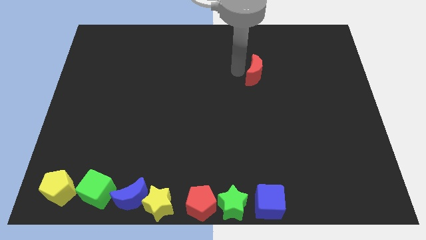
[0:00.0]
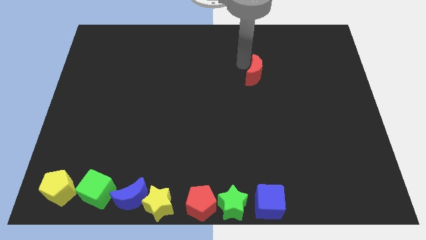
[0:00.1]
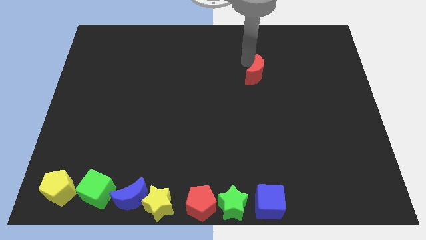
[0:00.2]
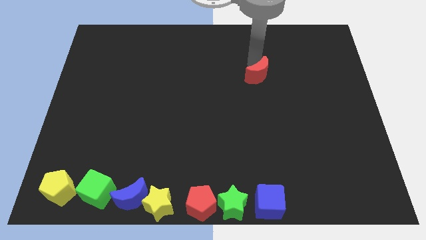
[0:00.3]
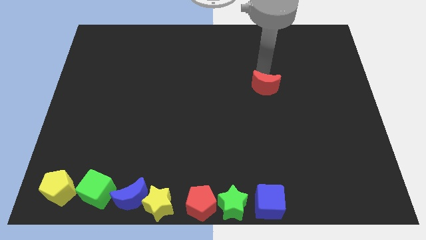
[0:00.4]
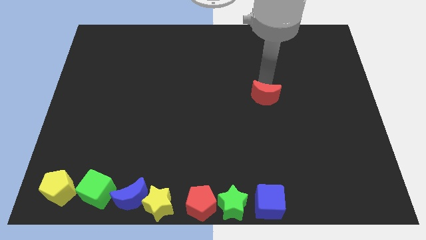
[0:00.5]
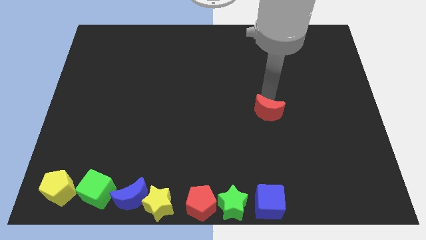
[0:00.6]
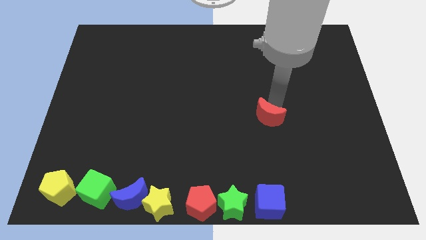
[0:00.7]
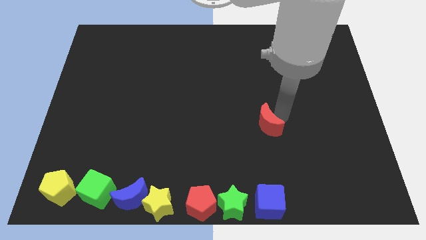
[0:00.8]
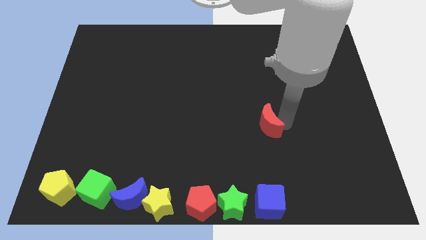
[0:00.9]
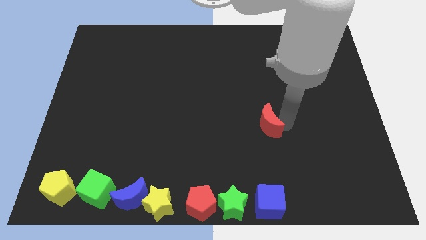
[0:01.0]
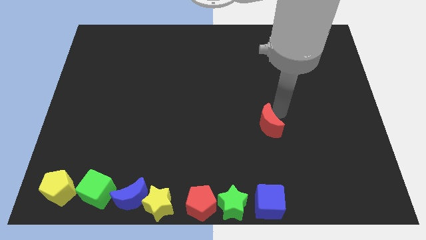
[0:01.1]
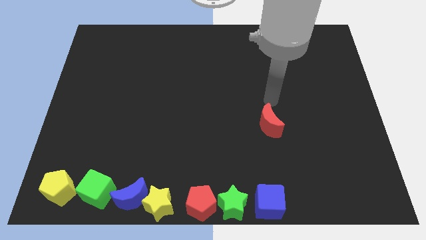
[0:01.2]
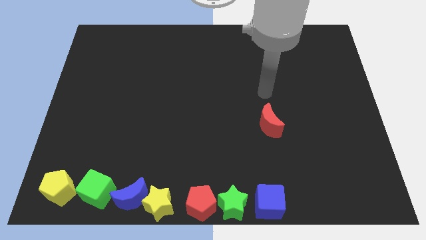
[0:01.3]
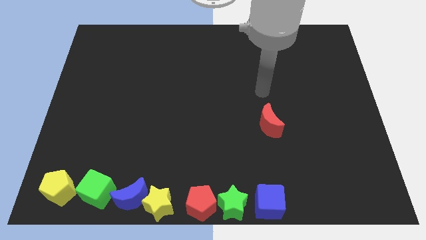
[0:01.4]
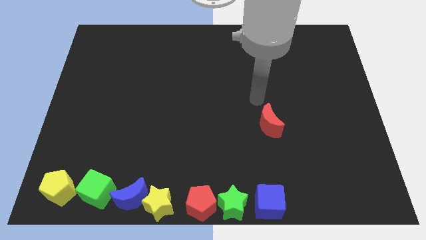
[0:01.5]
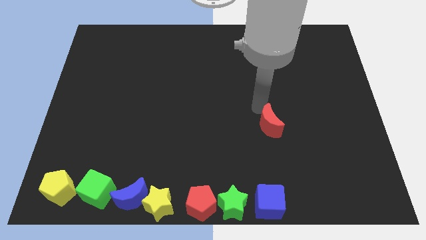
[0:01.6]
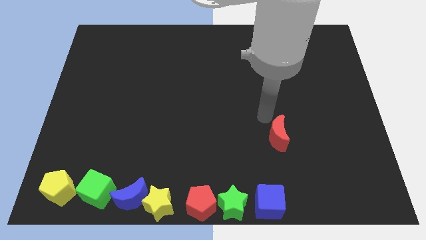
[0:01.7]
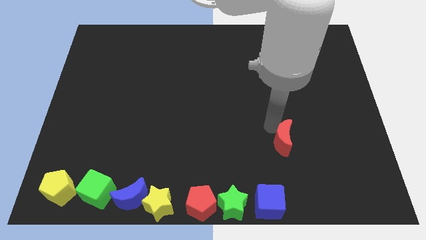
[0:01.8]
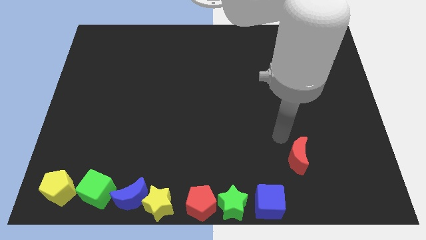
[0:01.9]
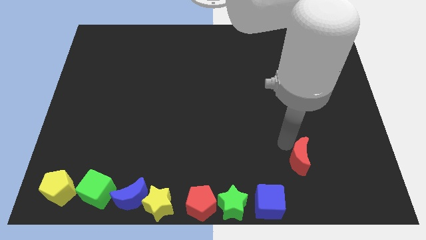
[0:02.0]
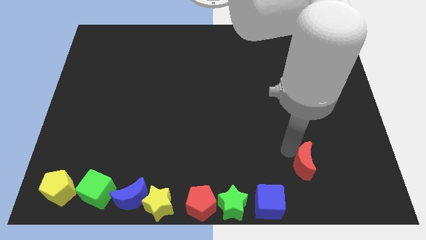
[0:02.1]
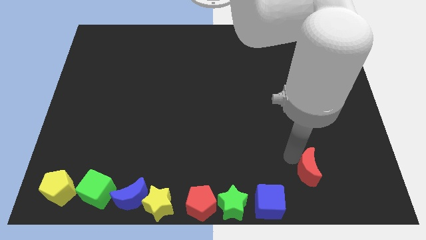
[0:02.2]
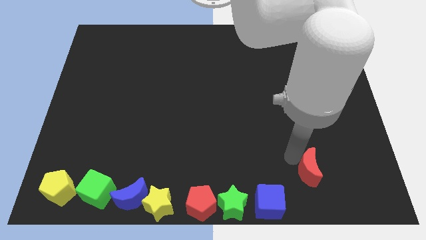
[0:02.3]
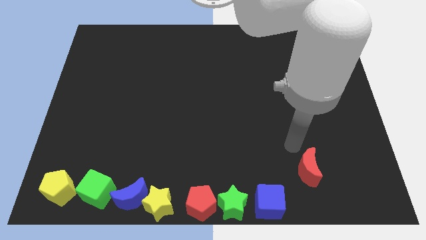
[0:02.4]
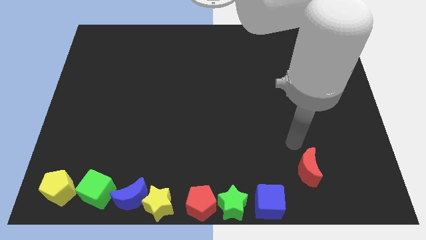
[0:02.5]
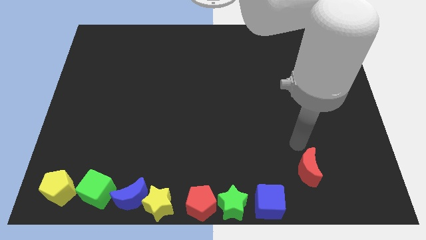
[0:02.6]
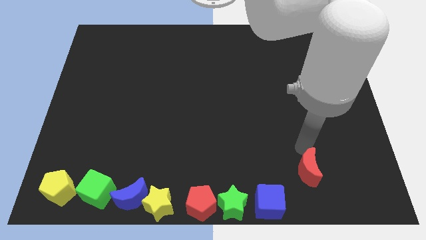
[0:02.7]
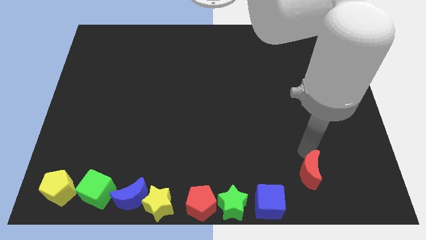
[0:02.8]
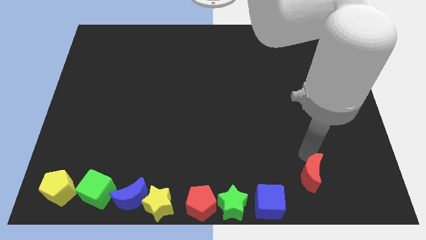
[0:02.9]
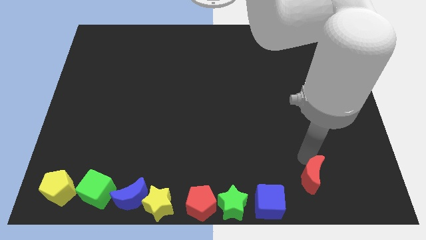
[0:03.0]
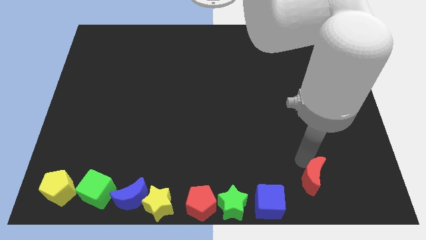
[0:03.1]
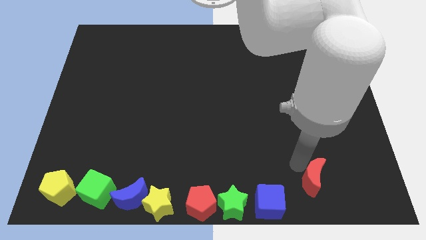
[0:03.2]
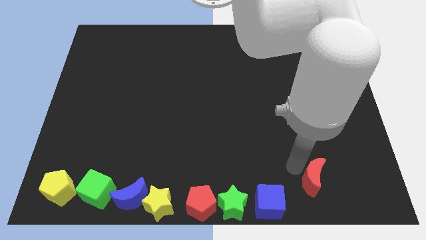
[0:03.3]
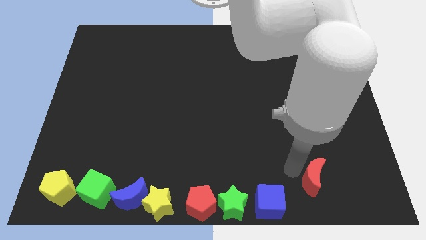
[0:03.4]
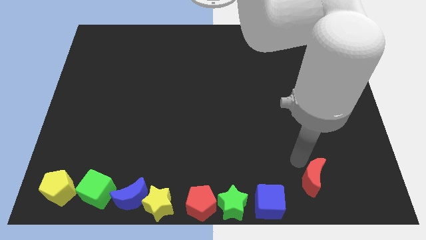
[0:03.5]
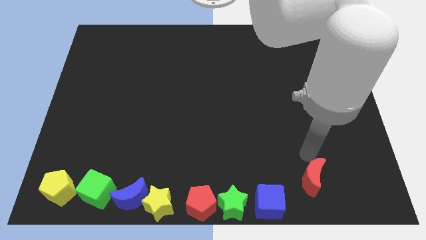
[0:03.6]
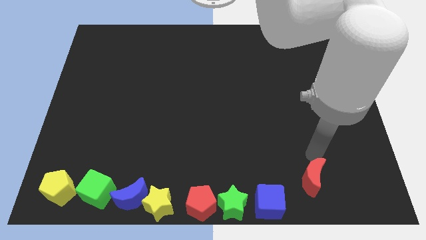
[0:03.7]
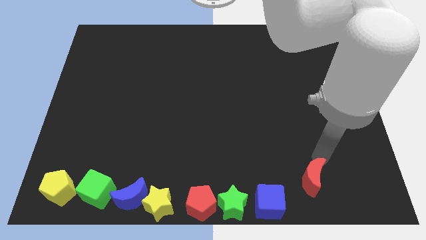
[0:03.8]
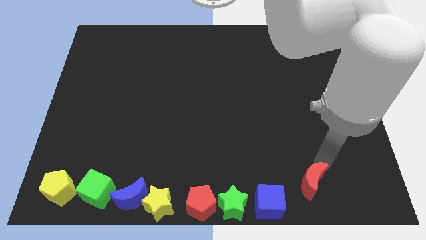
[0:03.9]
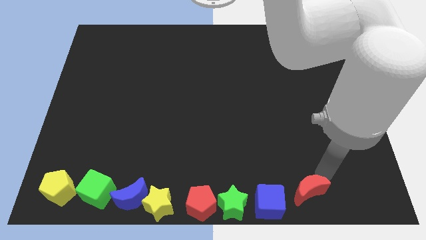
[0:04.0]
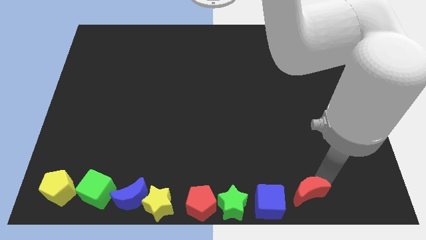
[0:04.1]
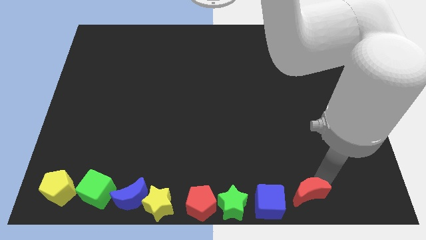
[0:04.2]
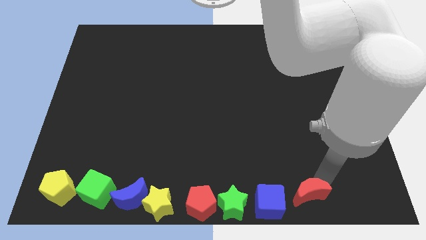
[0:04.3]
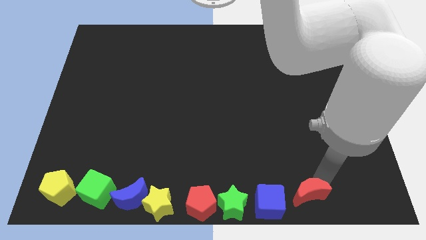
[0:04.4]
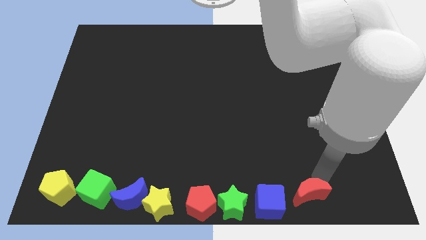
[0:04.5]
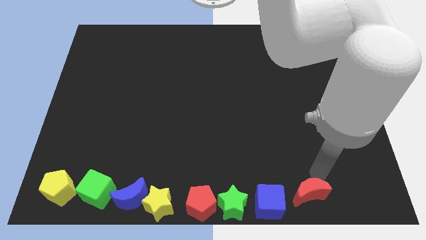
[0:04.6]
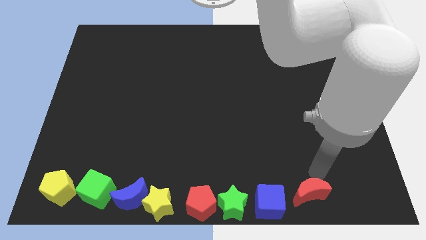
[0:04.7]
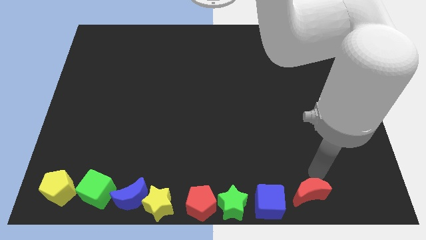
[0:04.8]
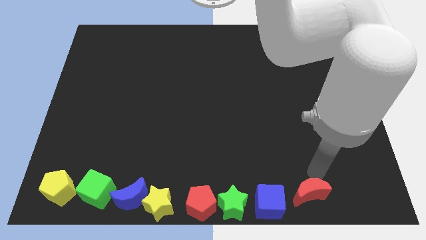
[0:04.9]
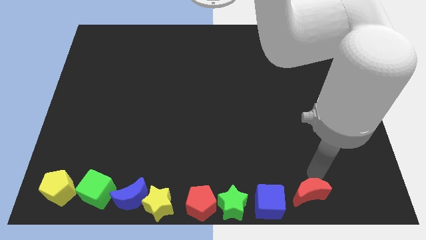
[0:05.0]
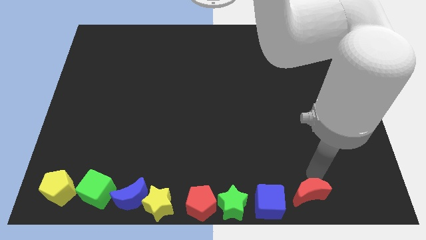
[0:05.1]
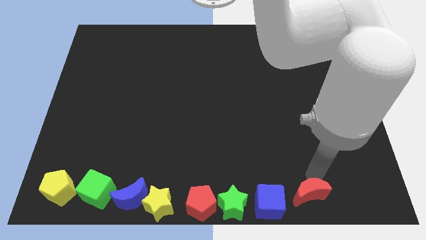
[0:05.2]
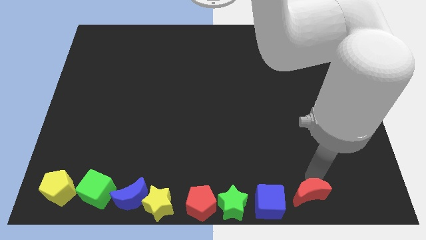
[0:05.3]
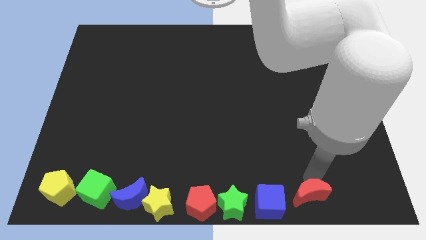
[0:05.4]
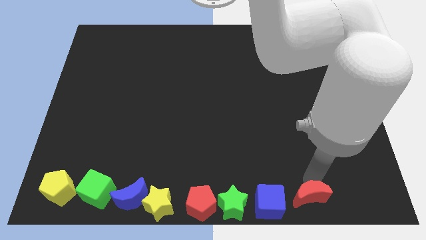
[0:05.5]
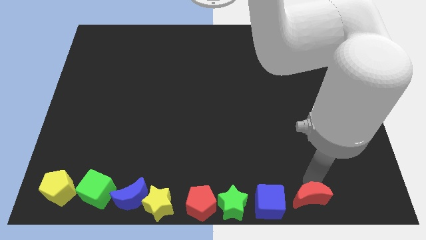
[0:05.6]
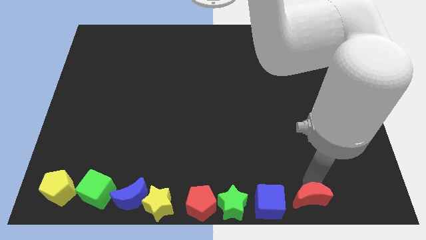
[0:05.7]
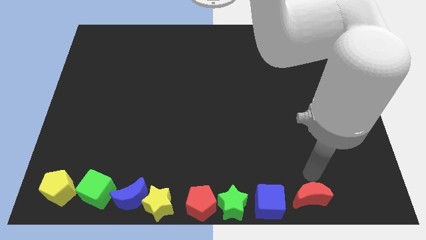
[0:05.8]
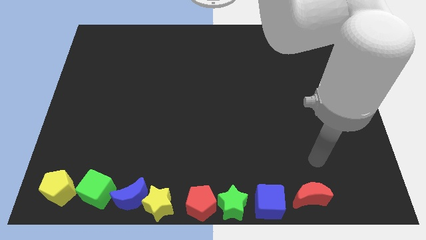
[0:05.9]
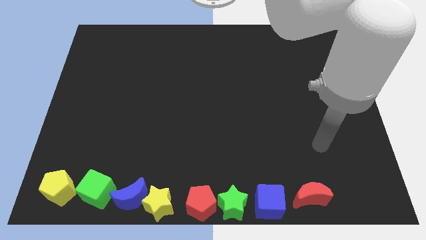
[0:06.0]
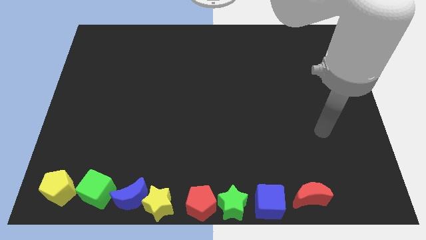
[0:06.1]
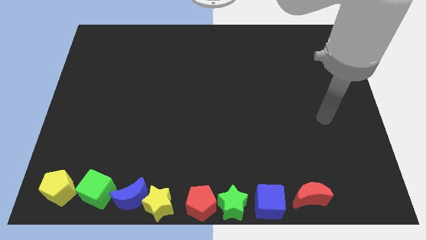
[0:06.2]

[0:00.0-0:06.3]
place the red moon to the right of the blue cube

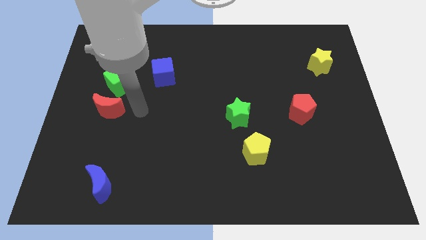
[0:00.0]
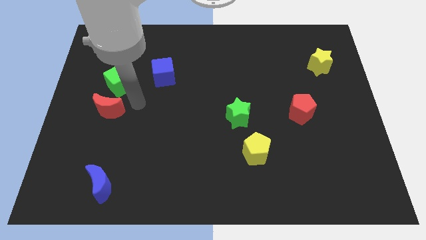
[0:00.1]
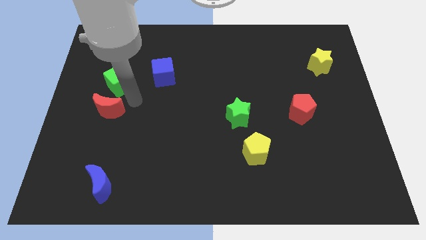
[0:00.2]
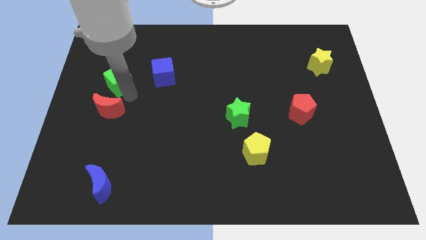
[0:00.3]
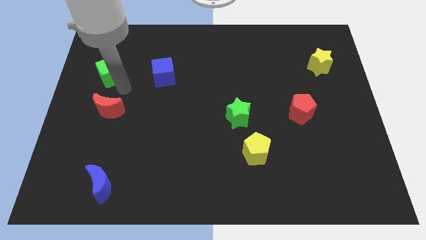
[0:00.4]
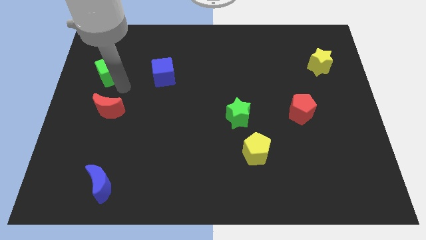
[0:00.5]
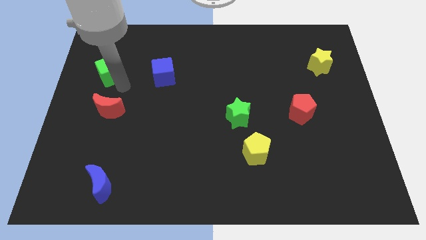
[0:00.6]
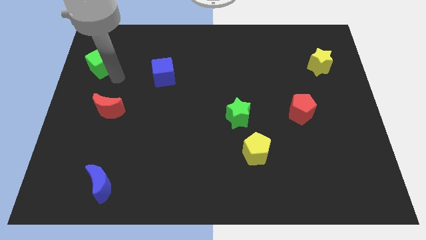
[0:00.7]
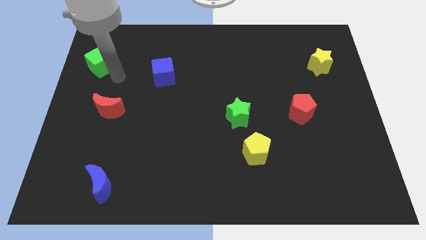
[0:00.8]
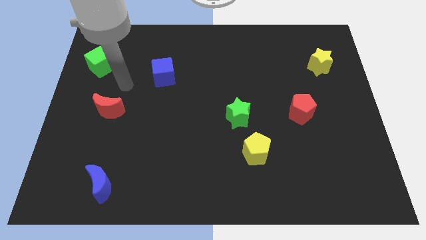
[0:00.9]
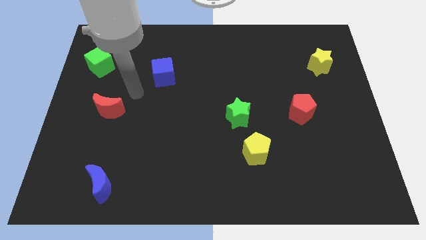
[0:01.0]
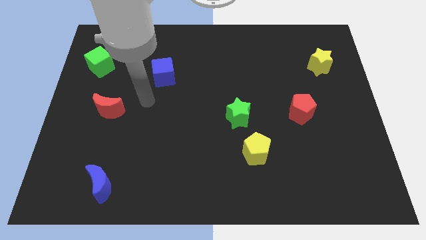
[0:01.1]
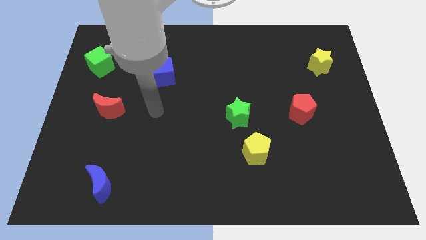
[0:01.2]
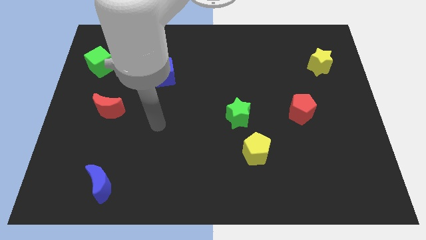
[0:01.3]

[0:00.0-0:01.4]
slide the green cube to the top left side of the board

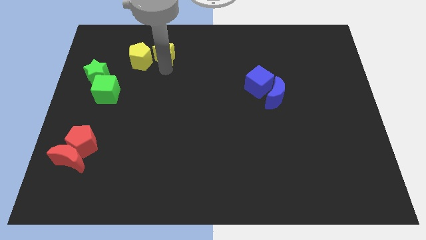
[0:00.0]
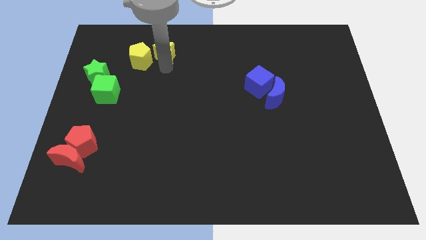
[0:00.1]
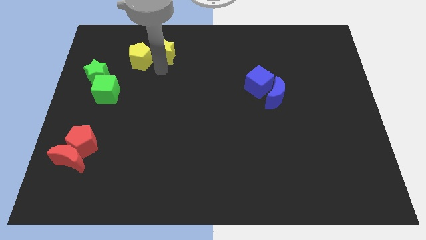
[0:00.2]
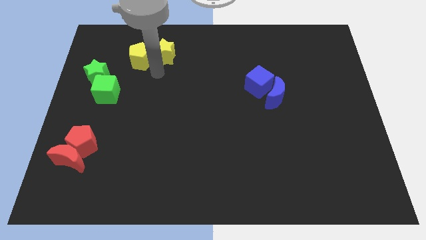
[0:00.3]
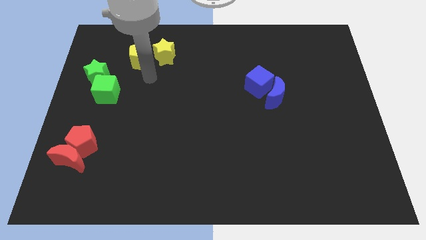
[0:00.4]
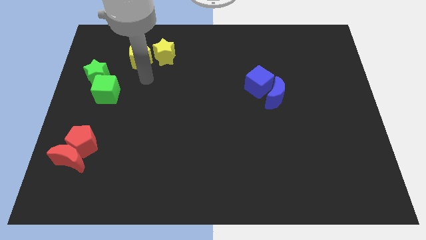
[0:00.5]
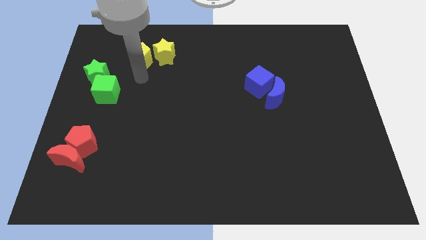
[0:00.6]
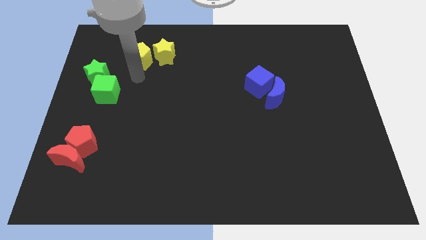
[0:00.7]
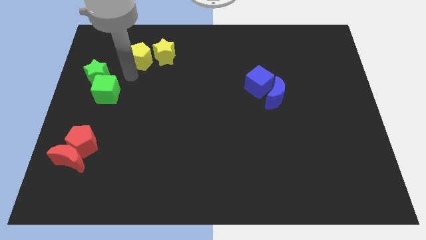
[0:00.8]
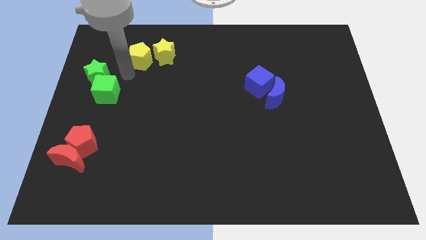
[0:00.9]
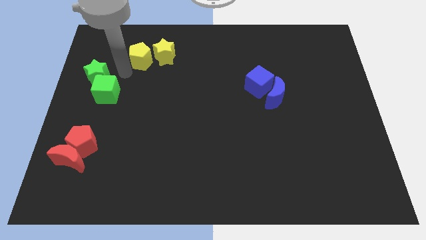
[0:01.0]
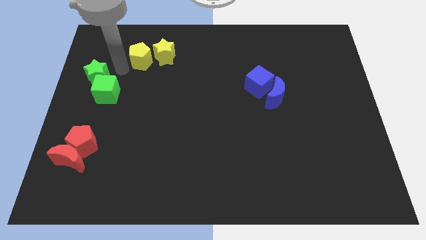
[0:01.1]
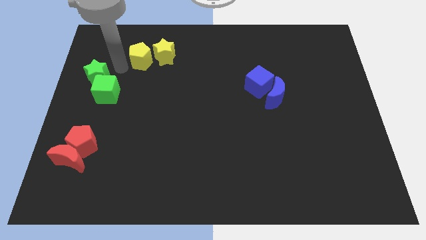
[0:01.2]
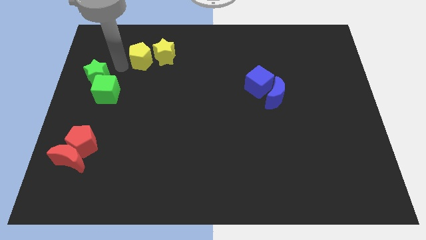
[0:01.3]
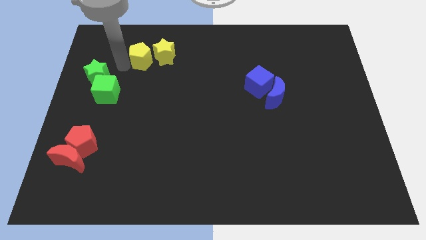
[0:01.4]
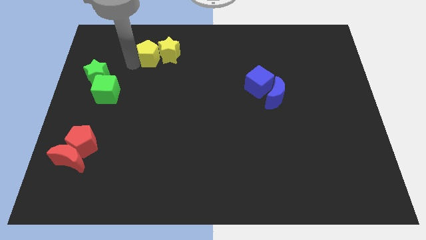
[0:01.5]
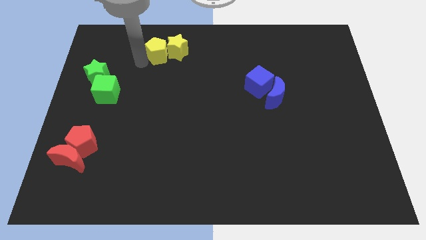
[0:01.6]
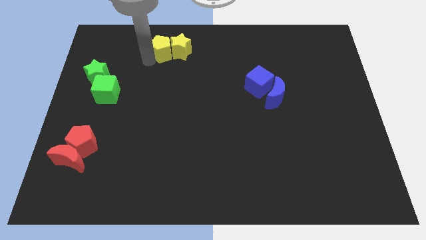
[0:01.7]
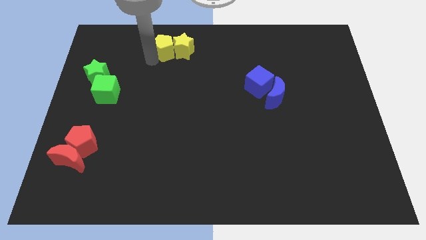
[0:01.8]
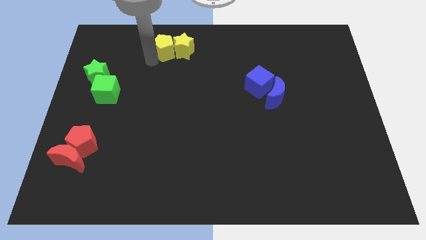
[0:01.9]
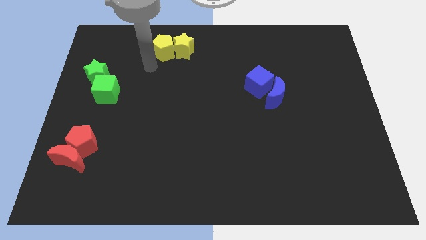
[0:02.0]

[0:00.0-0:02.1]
slide the yellow blocks towards the top center
